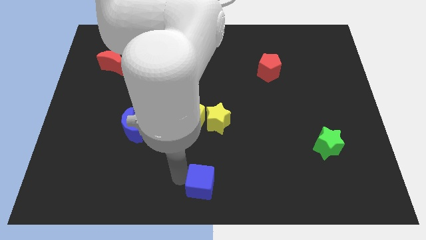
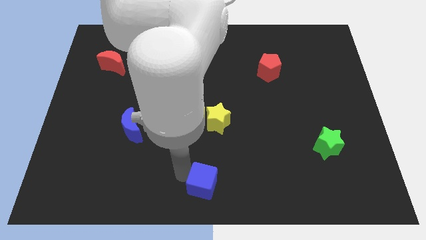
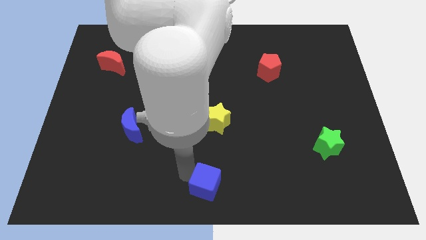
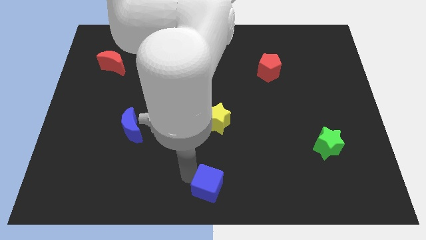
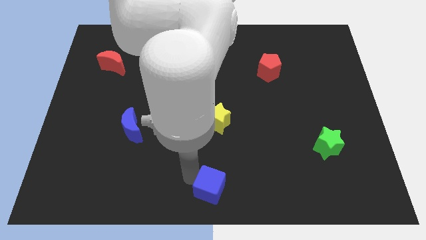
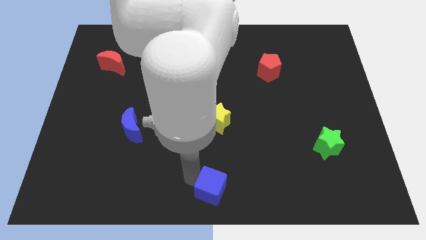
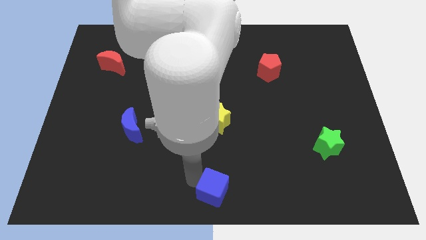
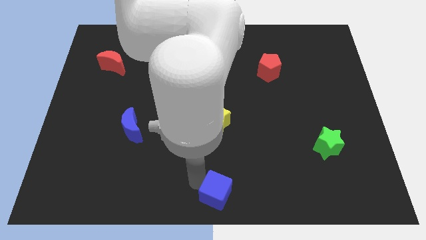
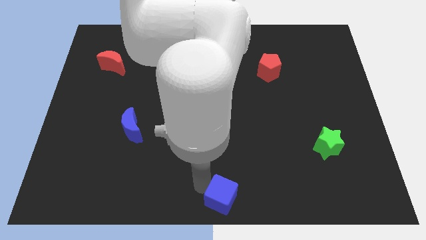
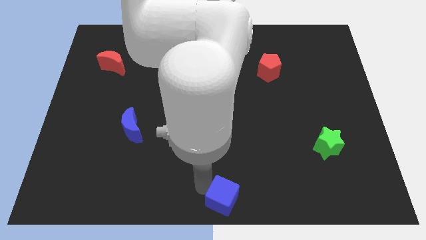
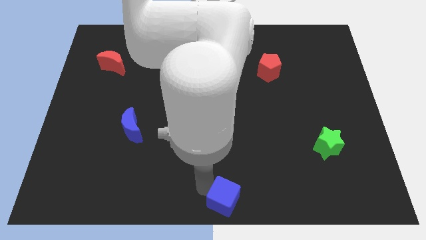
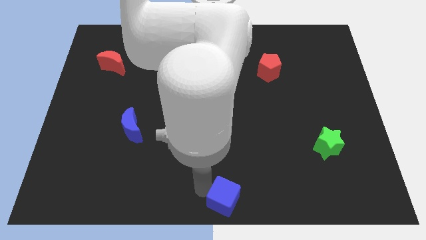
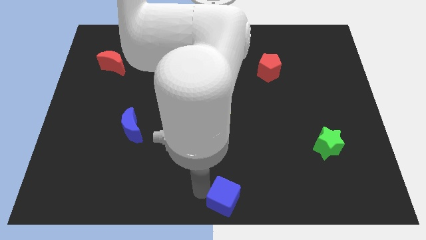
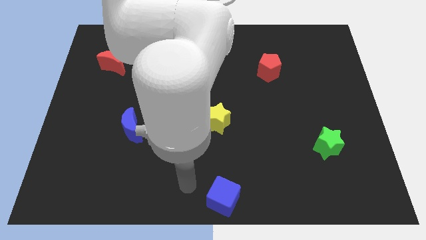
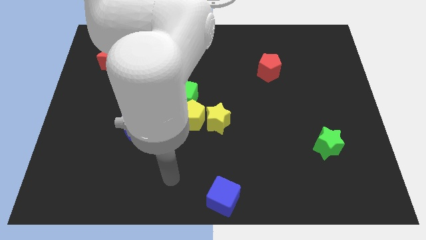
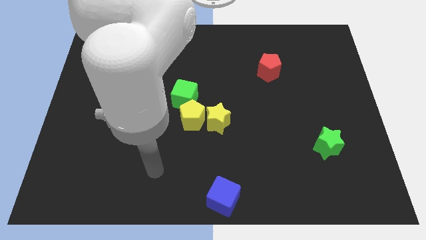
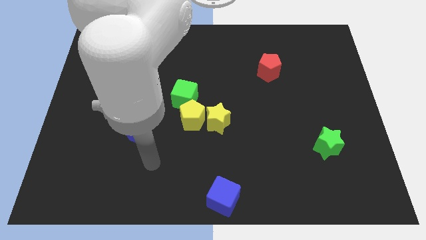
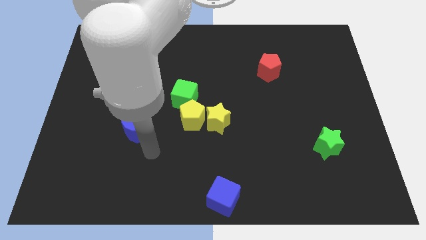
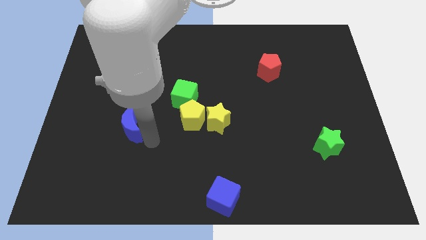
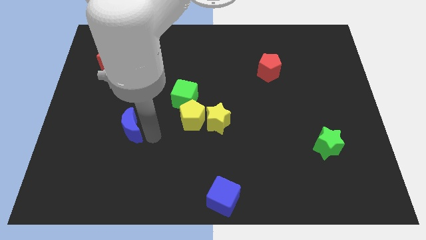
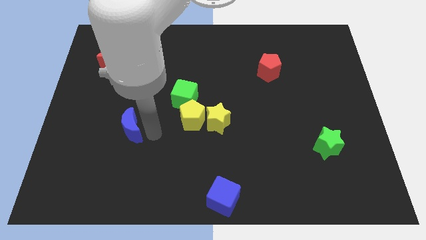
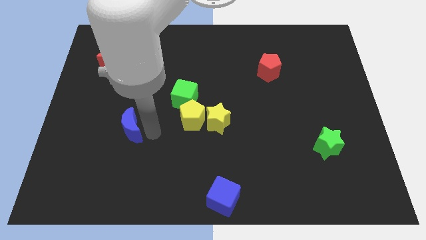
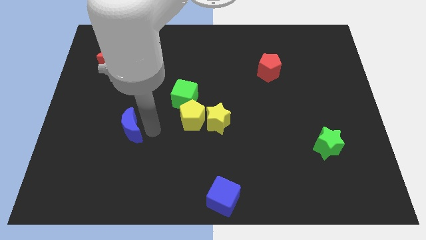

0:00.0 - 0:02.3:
push the blue cube to the bottom center of the board

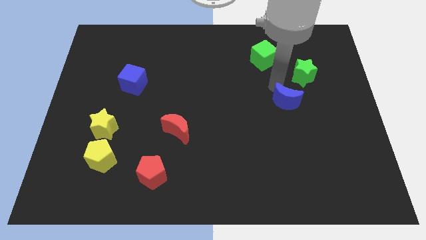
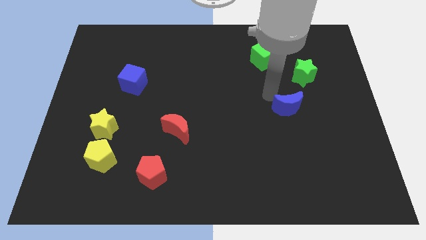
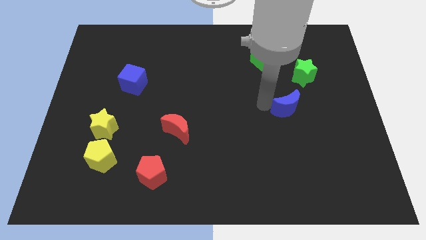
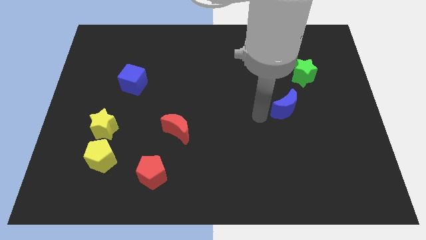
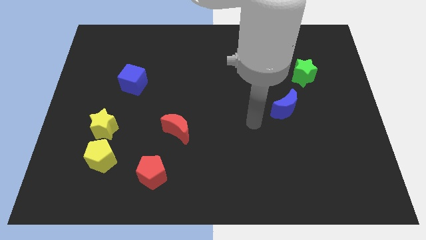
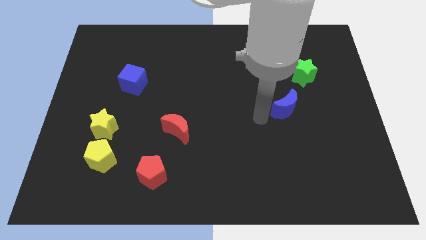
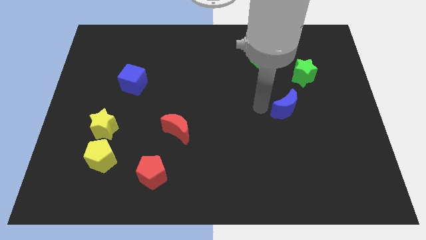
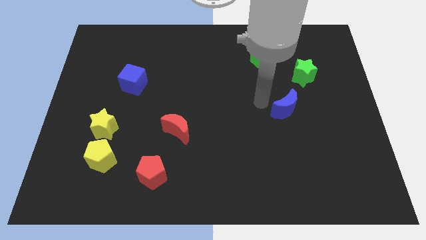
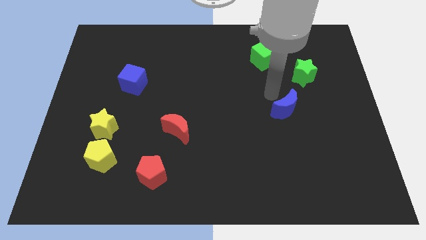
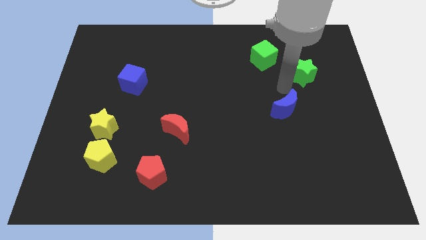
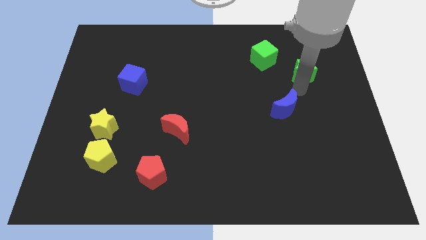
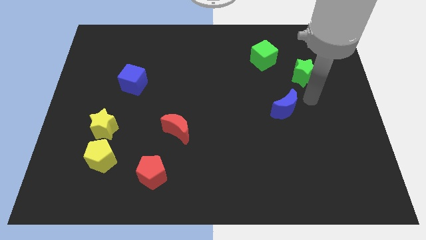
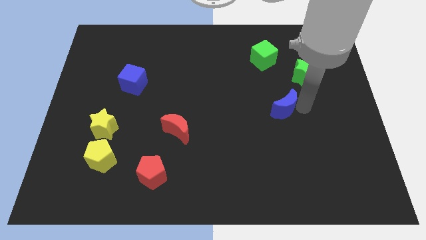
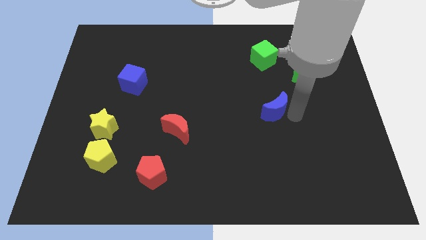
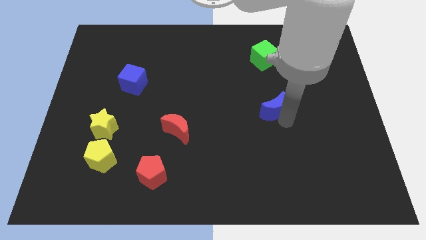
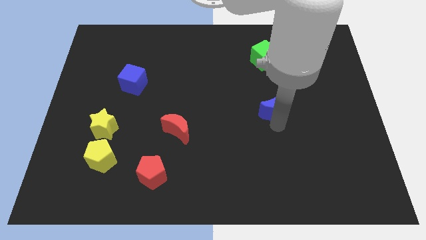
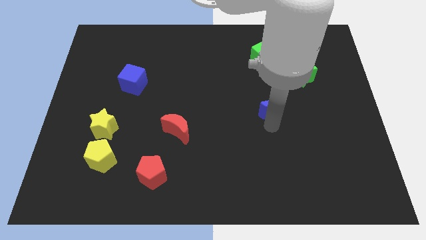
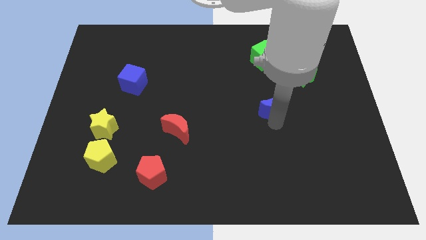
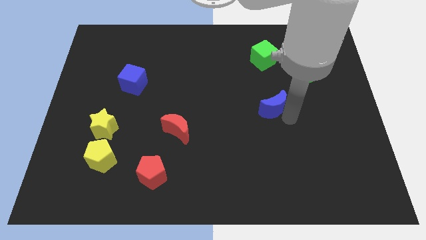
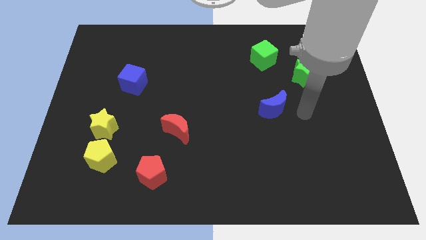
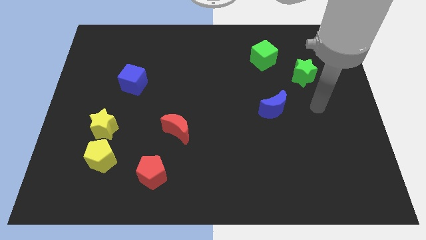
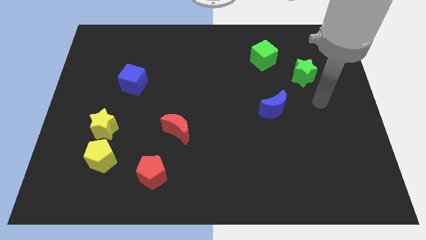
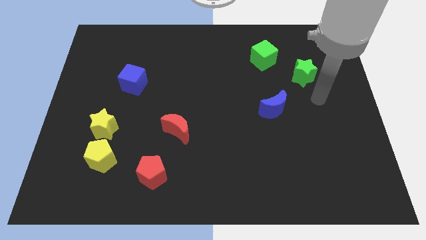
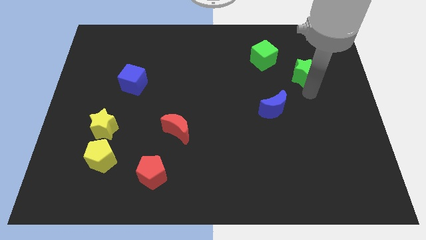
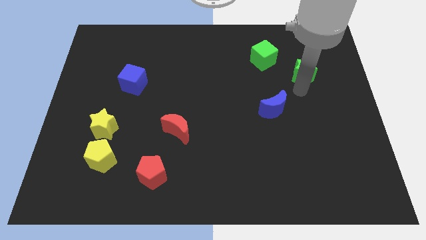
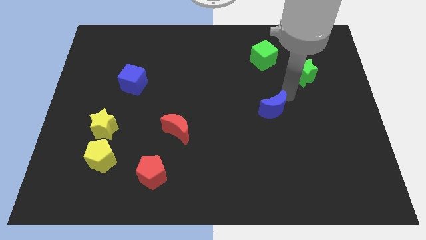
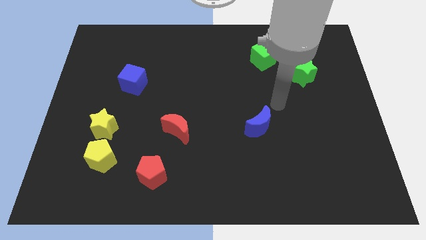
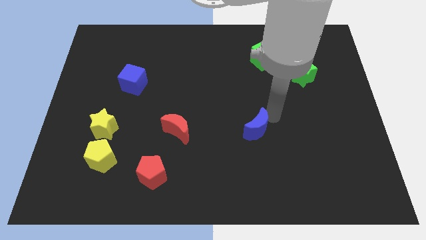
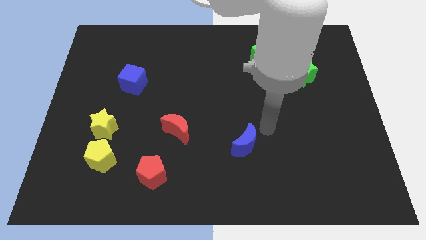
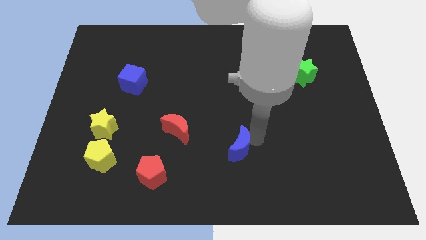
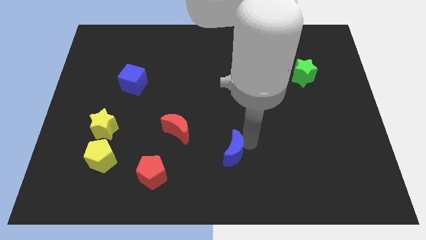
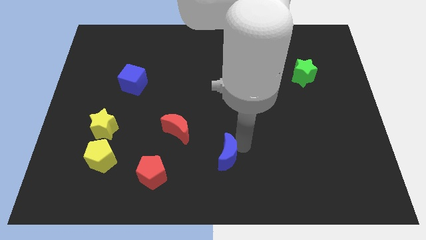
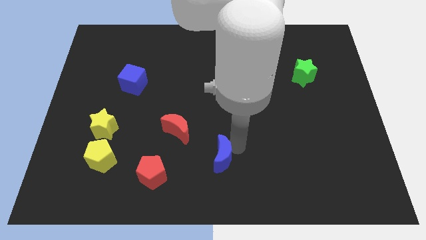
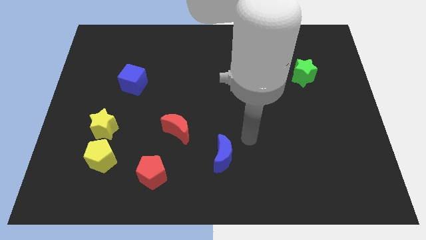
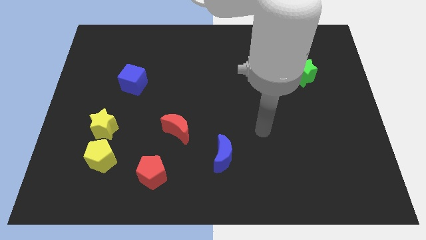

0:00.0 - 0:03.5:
move the blue crescent to the bottom of the board

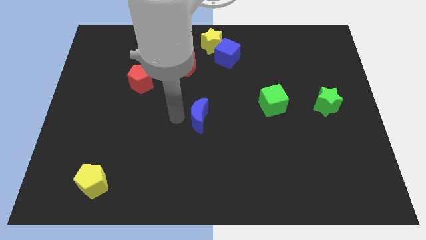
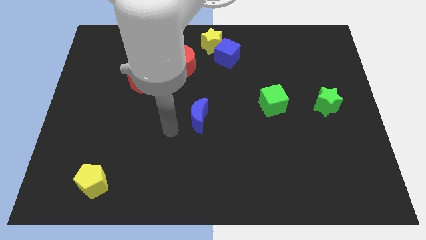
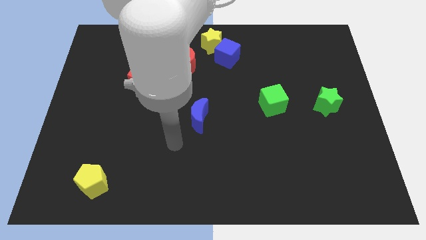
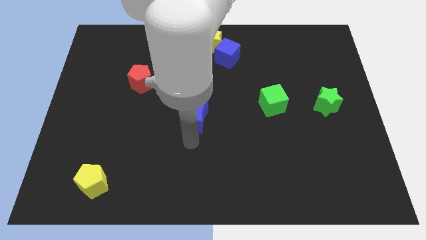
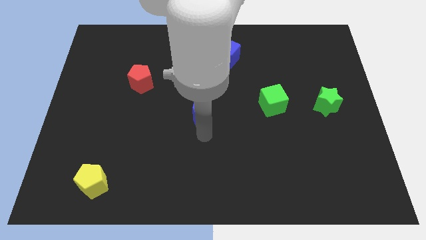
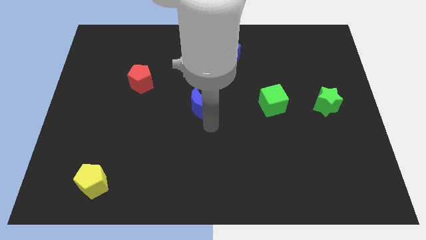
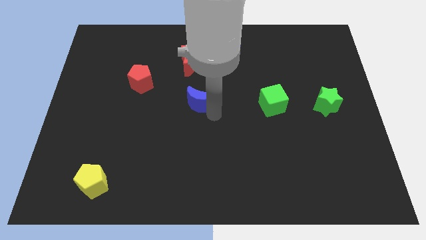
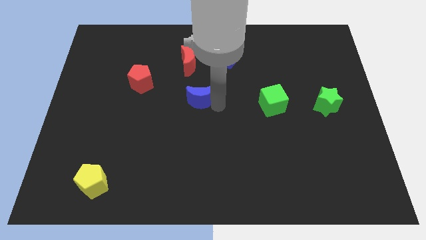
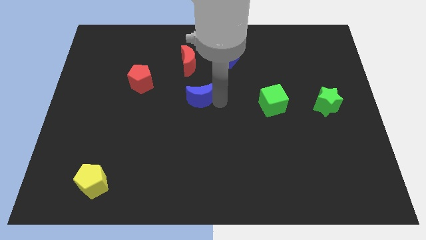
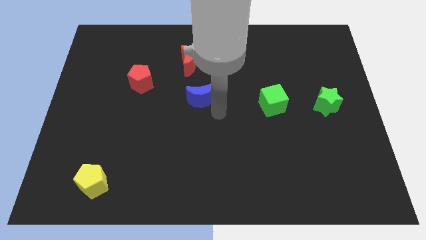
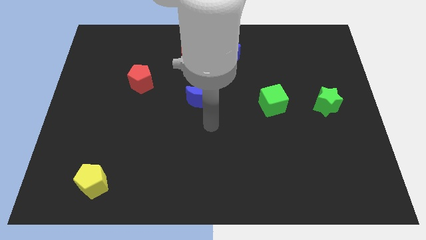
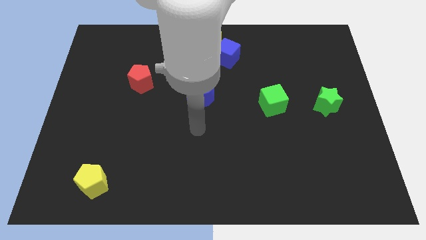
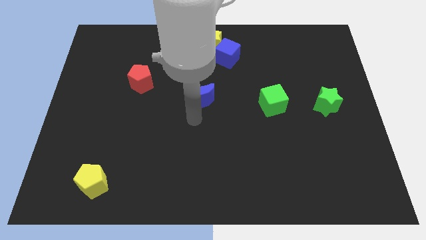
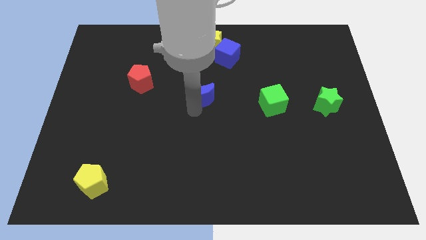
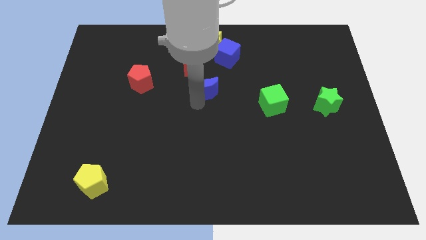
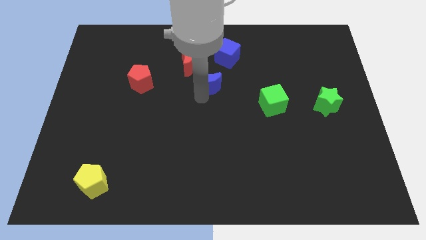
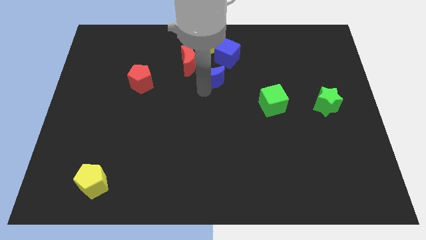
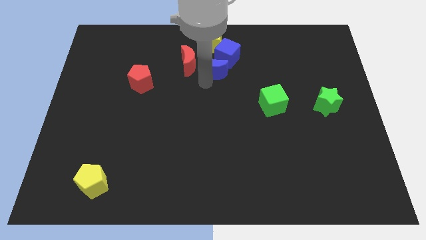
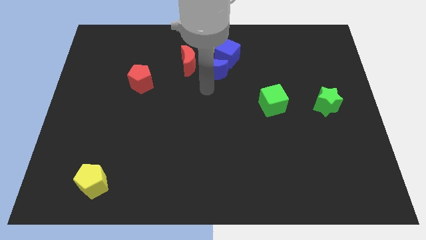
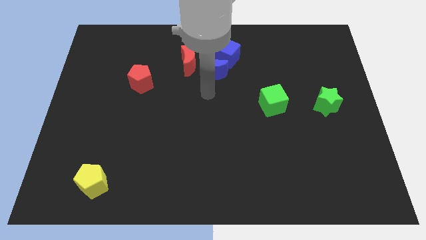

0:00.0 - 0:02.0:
push the blue crescent into the blue cube

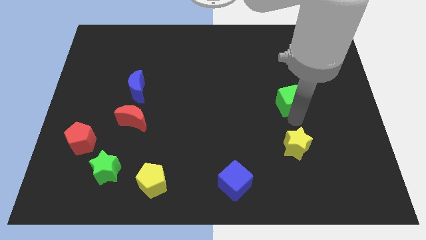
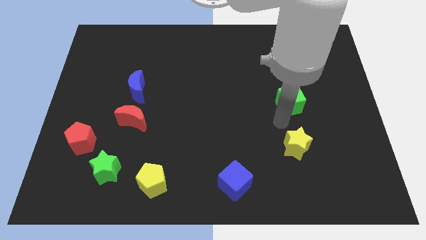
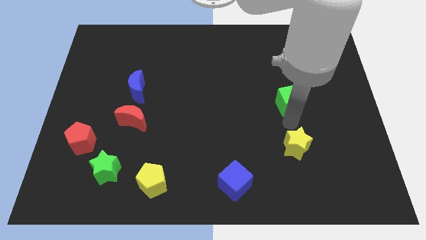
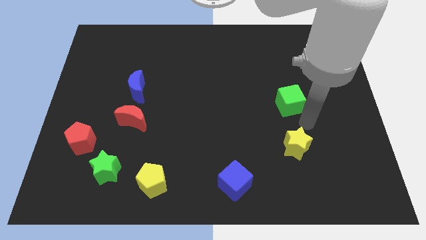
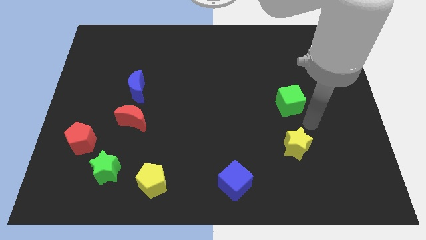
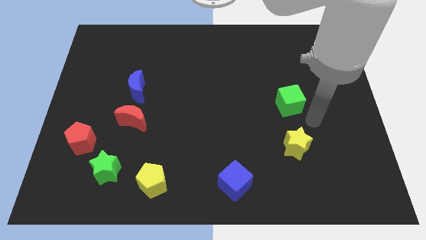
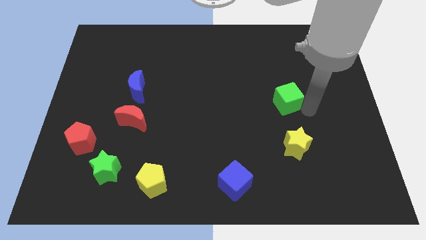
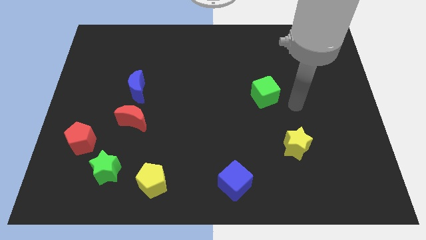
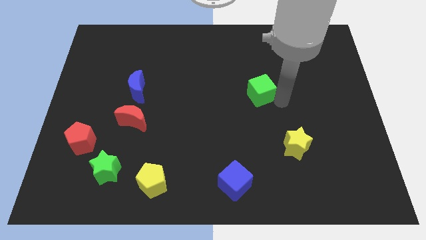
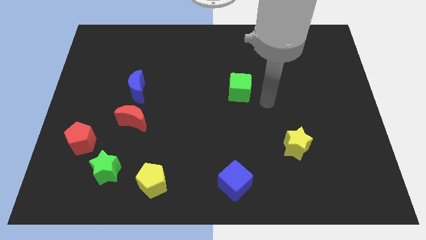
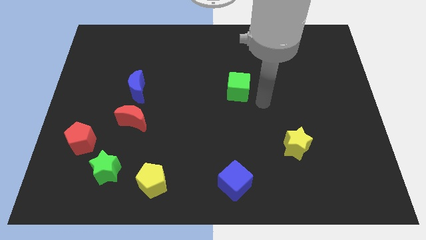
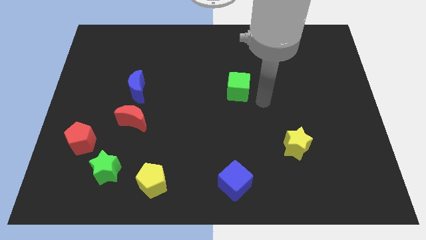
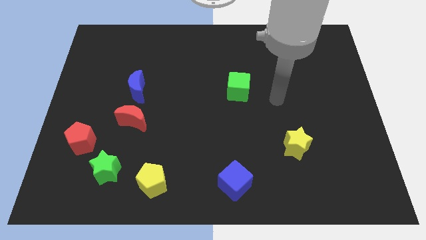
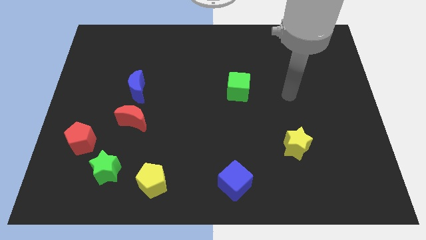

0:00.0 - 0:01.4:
push the green cube to the center
